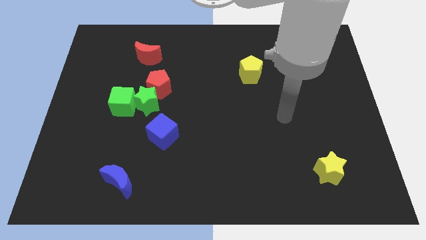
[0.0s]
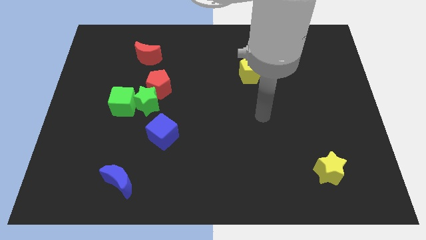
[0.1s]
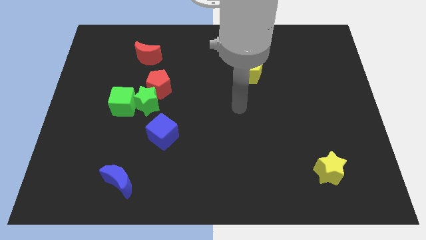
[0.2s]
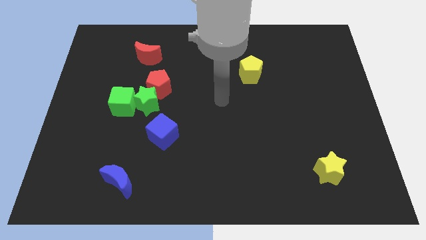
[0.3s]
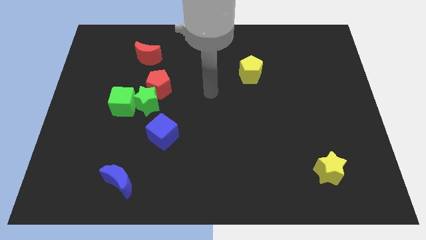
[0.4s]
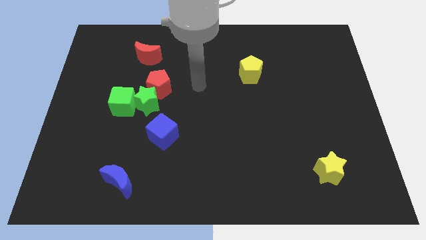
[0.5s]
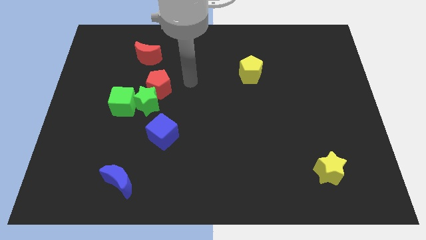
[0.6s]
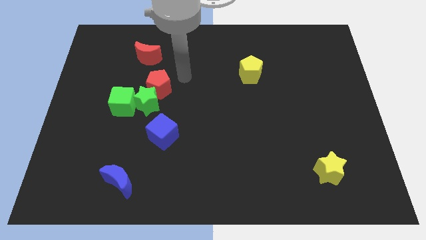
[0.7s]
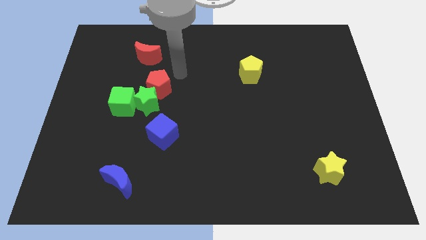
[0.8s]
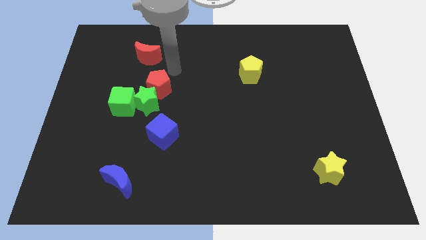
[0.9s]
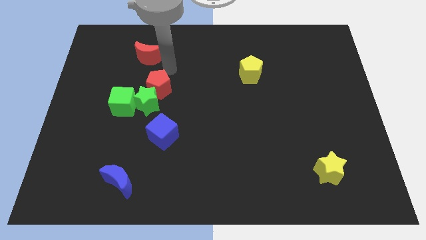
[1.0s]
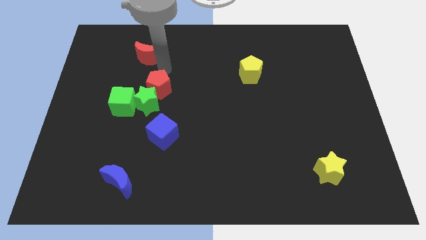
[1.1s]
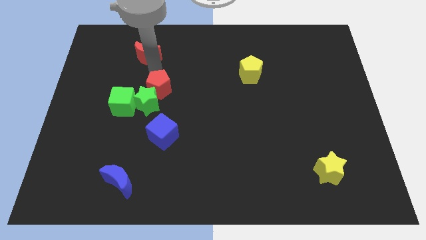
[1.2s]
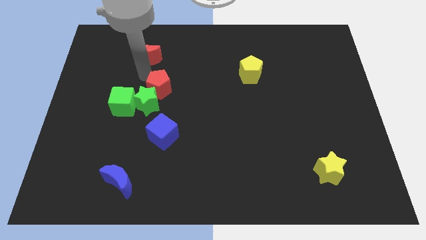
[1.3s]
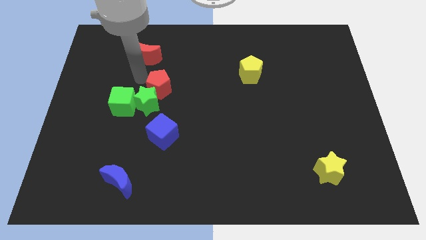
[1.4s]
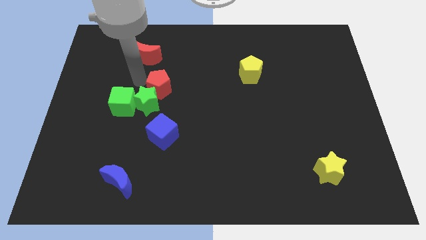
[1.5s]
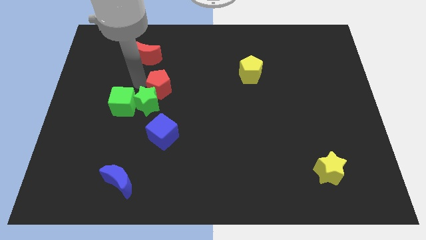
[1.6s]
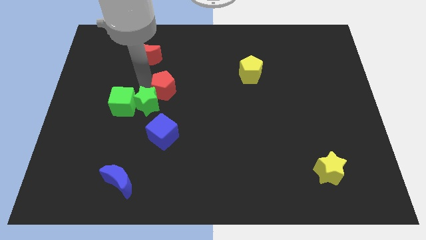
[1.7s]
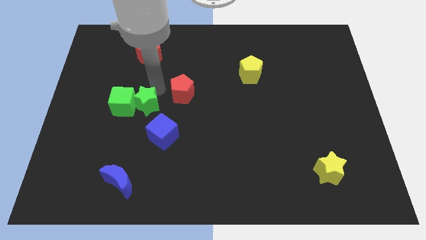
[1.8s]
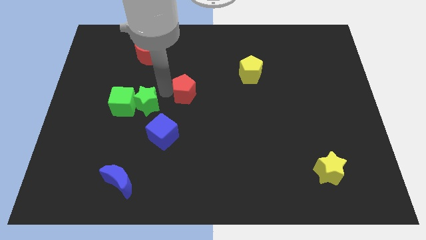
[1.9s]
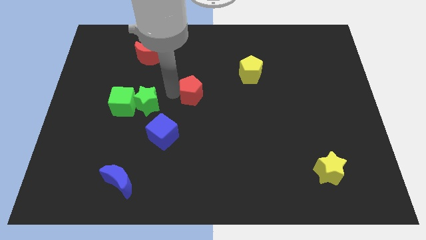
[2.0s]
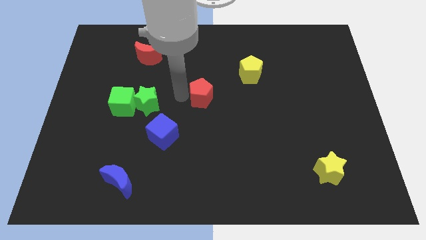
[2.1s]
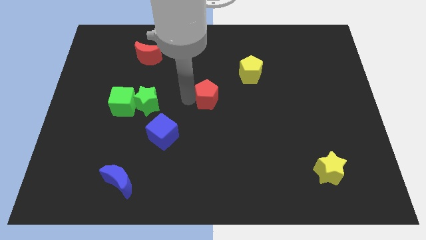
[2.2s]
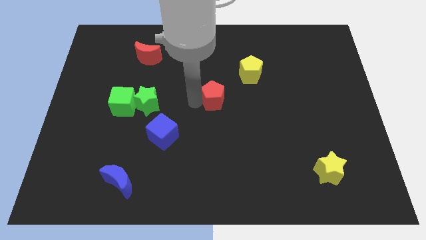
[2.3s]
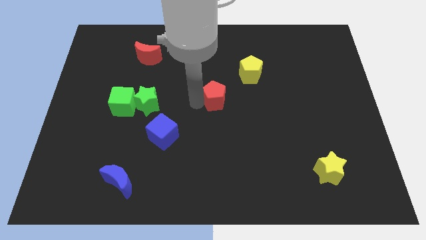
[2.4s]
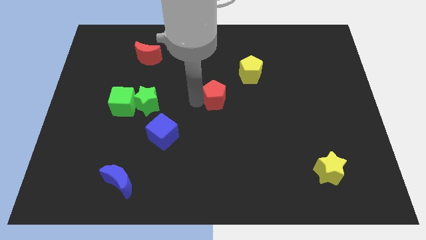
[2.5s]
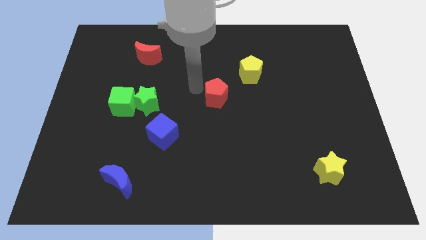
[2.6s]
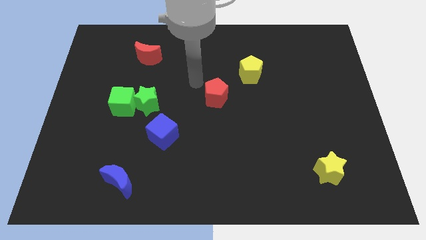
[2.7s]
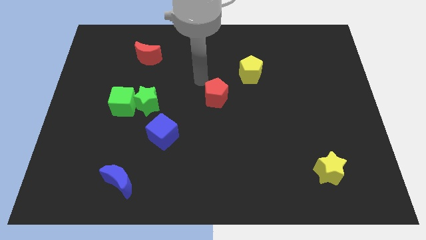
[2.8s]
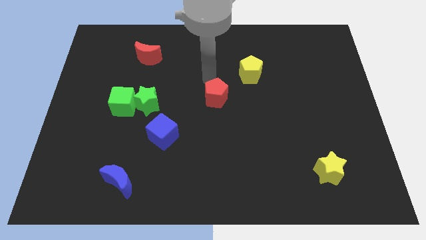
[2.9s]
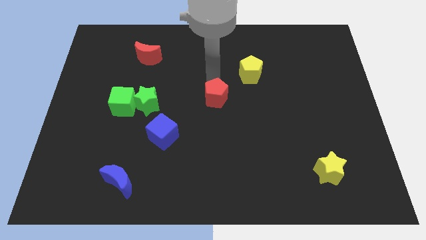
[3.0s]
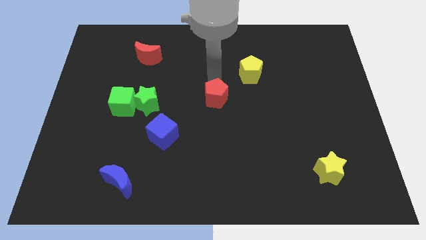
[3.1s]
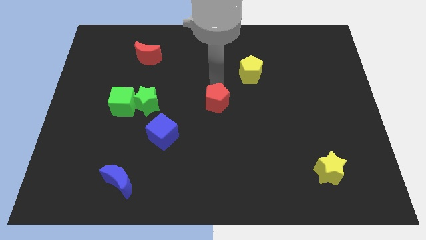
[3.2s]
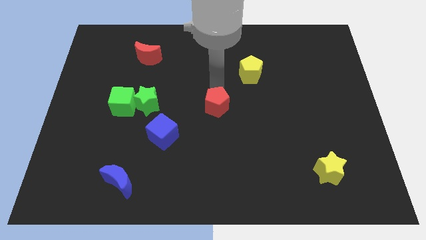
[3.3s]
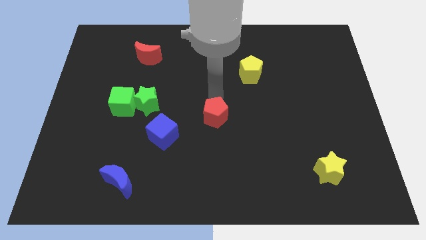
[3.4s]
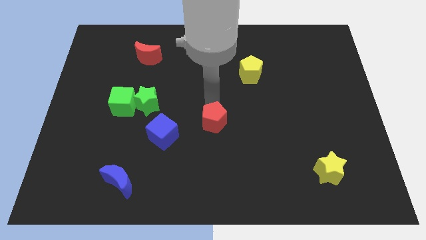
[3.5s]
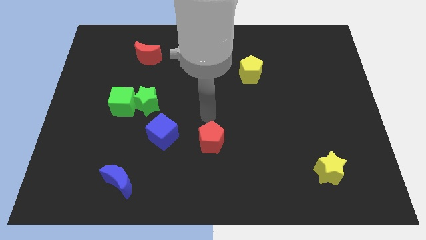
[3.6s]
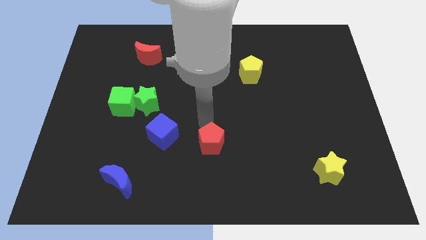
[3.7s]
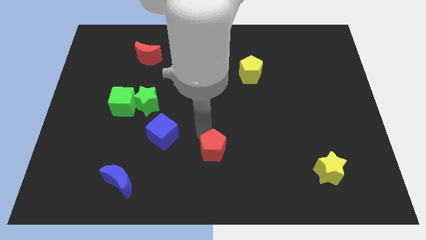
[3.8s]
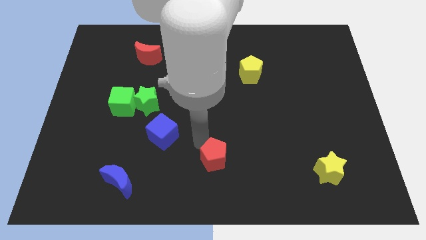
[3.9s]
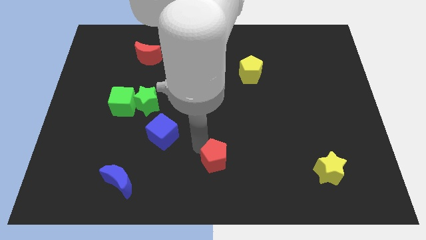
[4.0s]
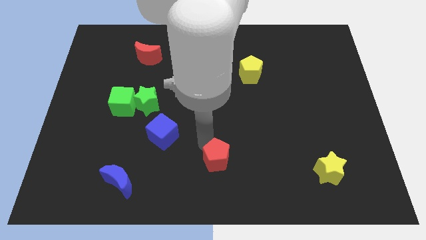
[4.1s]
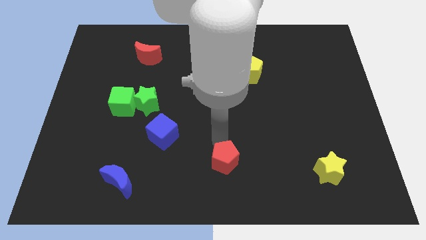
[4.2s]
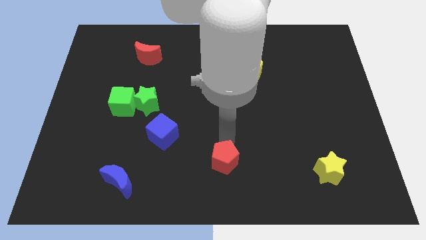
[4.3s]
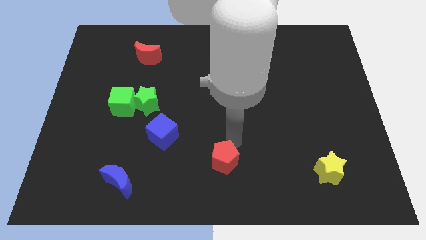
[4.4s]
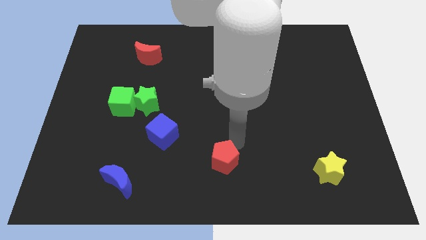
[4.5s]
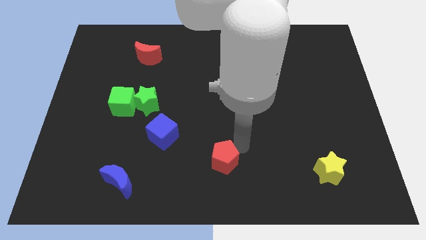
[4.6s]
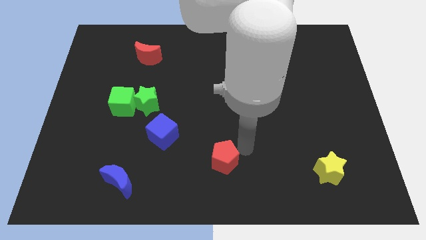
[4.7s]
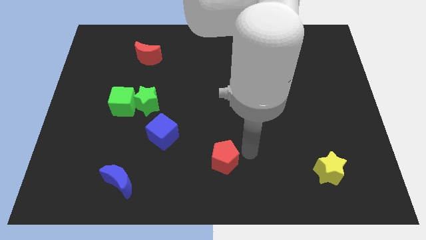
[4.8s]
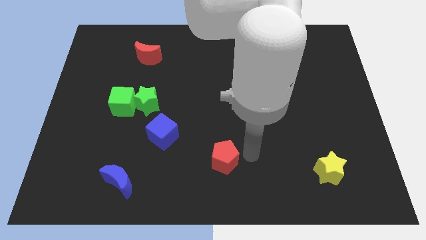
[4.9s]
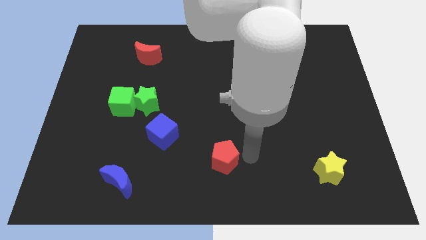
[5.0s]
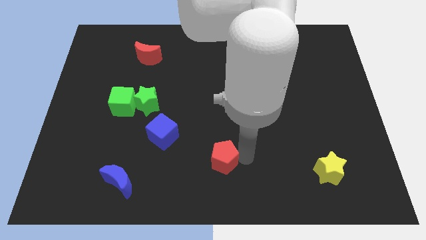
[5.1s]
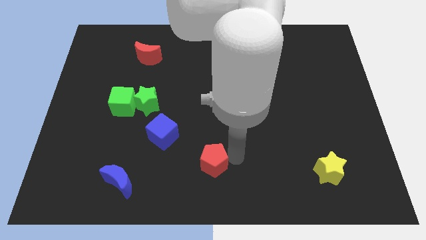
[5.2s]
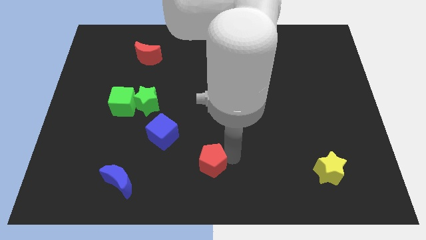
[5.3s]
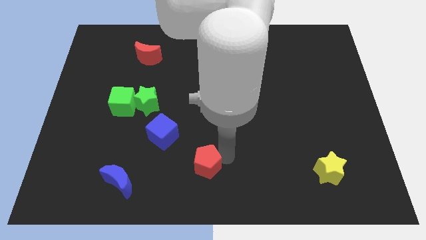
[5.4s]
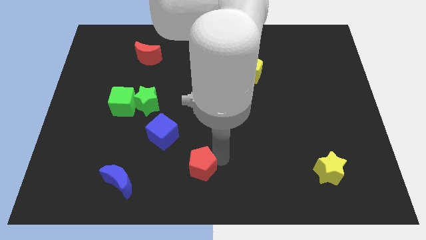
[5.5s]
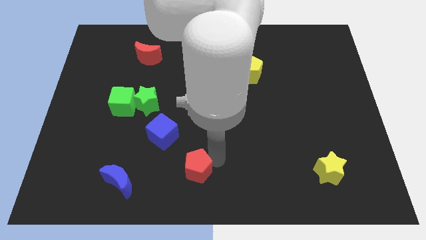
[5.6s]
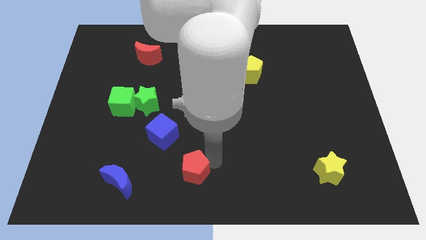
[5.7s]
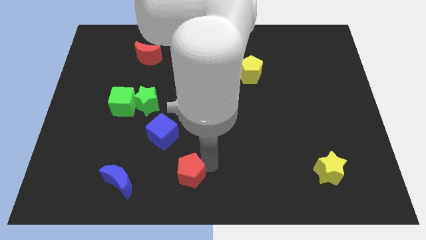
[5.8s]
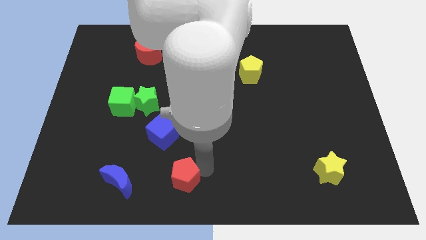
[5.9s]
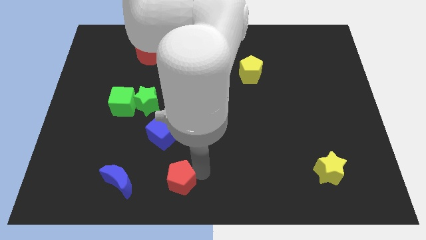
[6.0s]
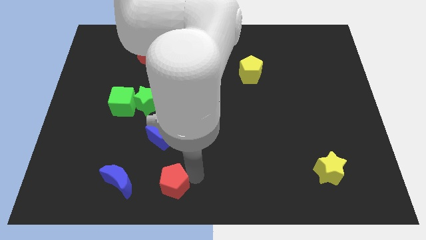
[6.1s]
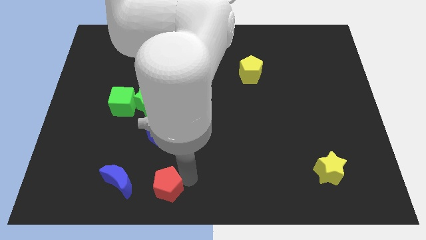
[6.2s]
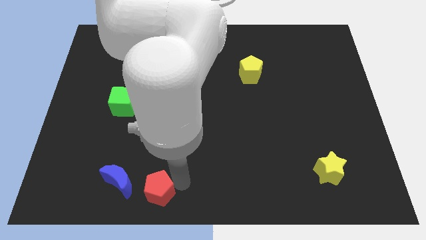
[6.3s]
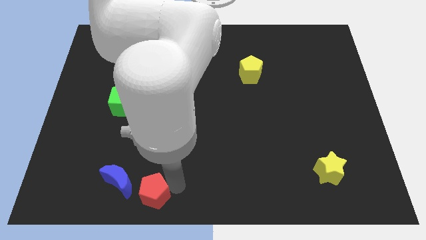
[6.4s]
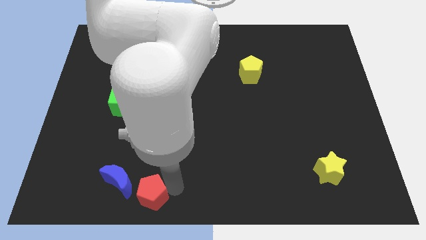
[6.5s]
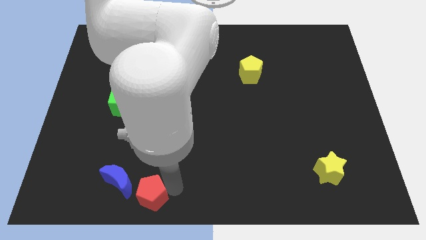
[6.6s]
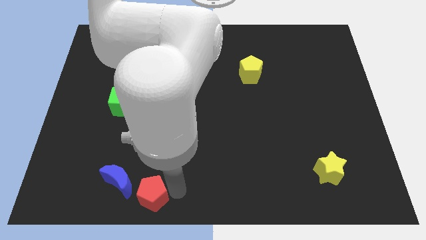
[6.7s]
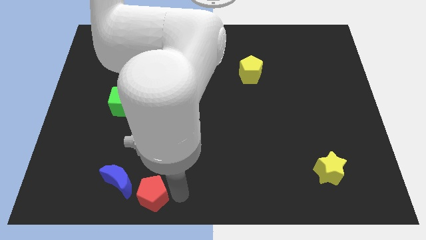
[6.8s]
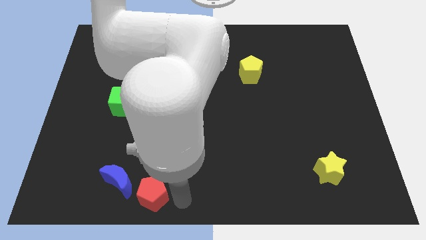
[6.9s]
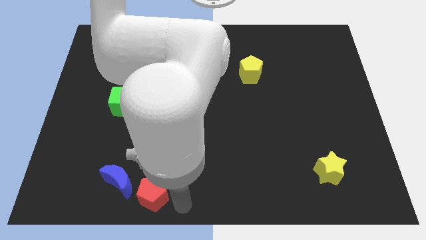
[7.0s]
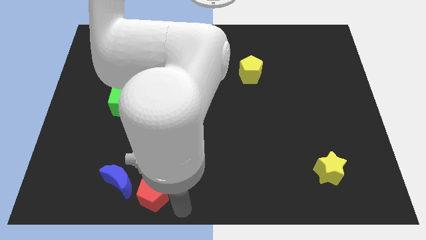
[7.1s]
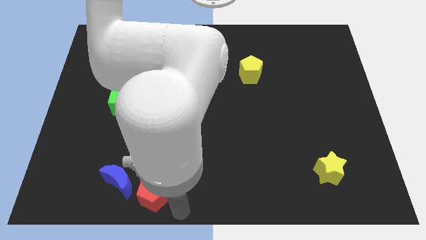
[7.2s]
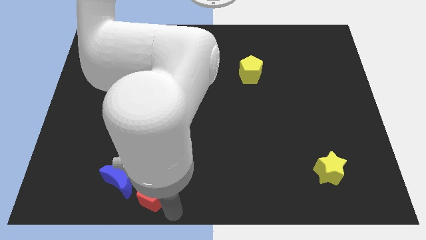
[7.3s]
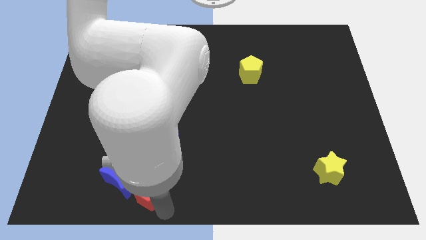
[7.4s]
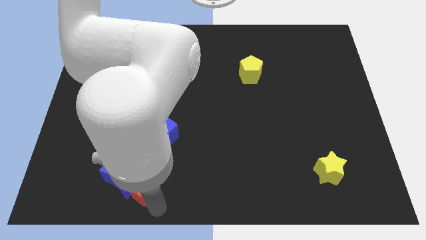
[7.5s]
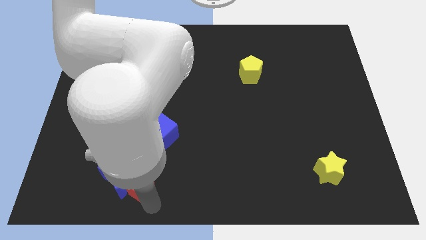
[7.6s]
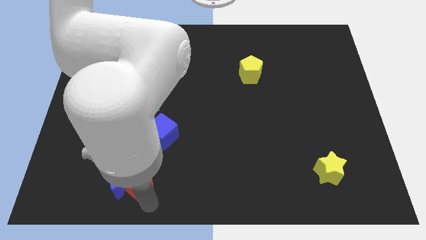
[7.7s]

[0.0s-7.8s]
slide the red pentagon to the blue moon
